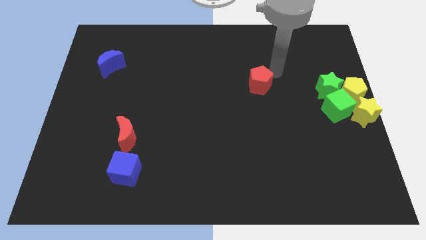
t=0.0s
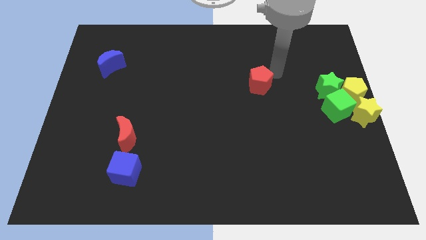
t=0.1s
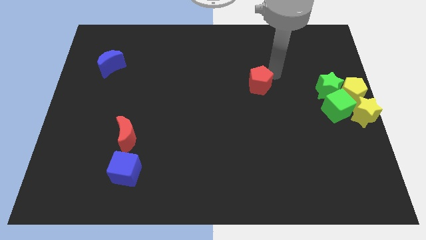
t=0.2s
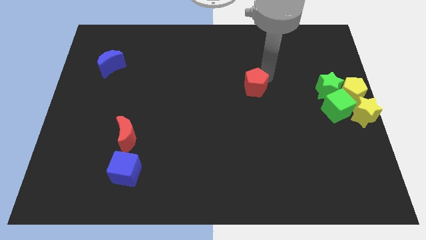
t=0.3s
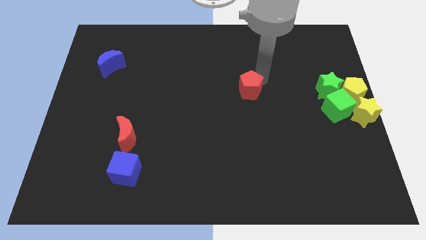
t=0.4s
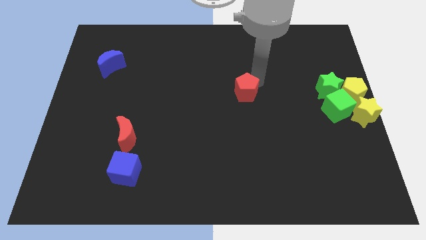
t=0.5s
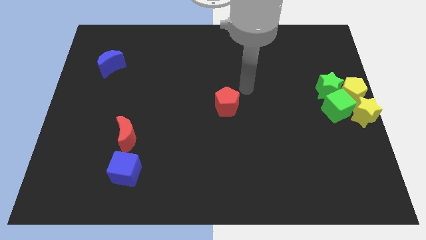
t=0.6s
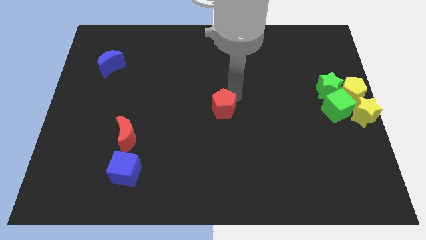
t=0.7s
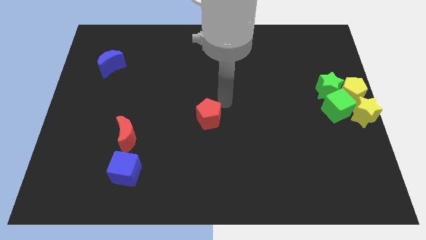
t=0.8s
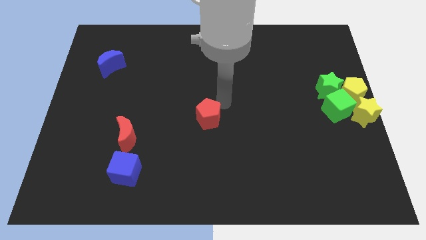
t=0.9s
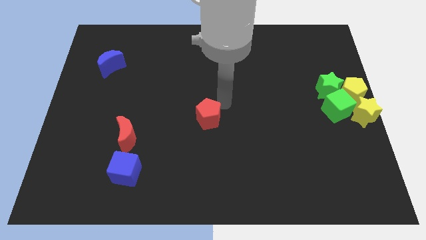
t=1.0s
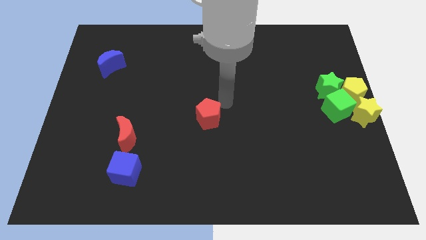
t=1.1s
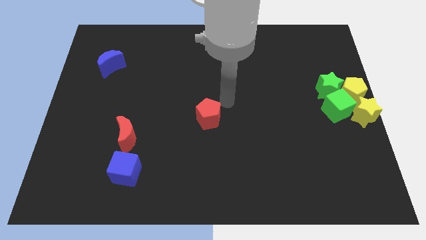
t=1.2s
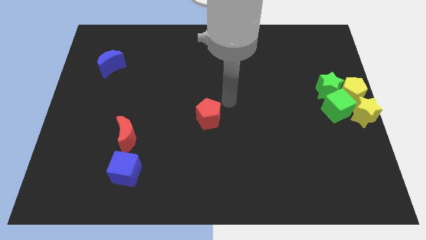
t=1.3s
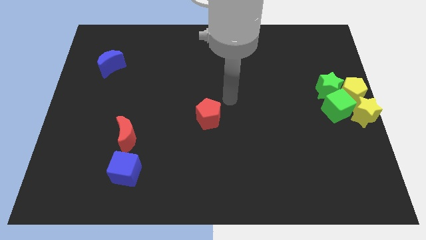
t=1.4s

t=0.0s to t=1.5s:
place the red pentagon towards the center of the board

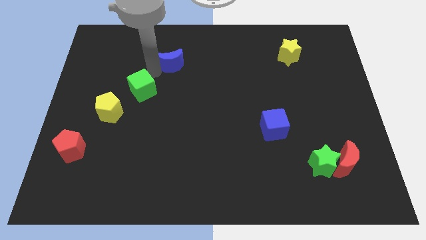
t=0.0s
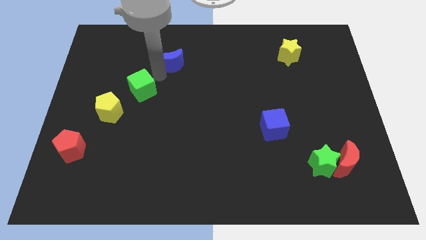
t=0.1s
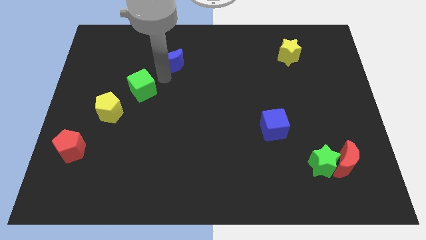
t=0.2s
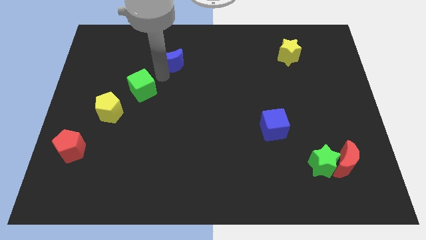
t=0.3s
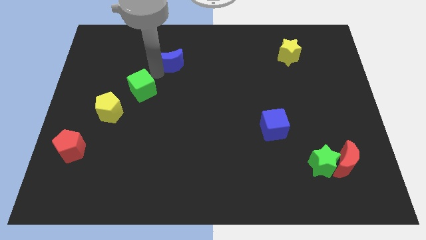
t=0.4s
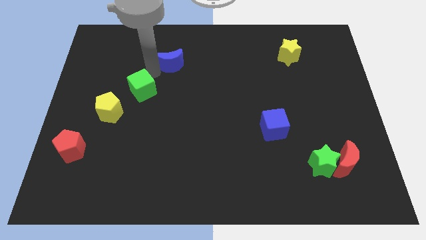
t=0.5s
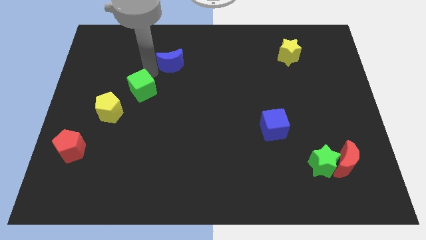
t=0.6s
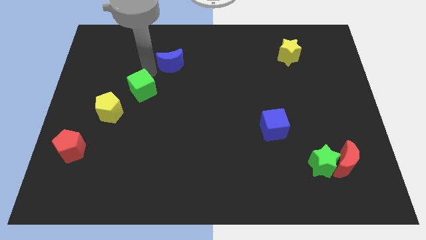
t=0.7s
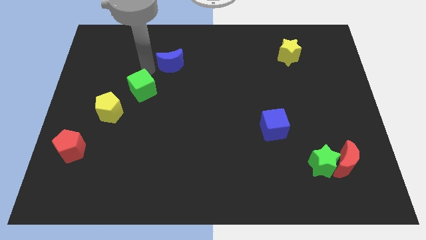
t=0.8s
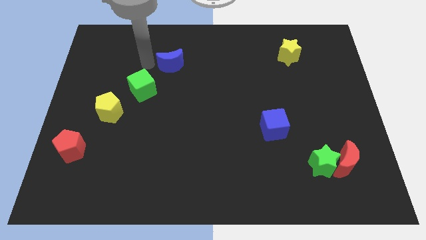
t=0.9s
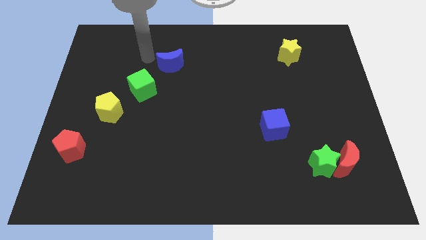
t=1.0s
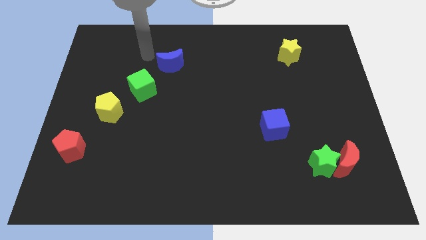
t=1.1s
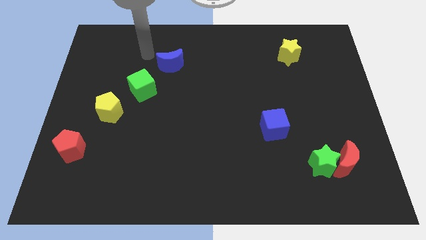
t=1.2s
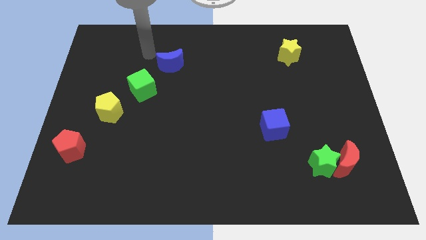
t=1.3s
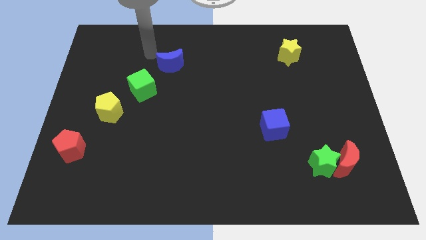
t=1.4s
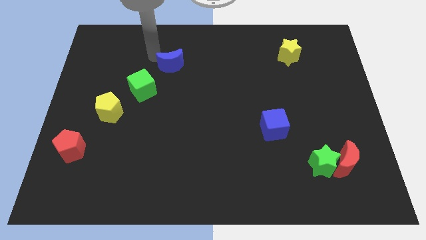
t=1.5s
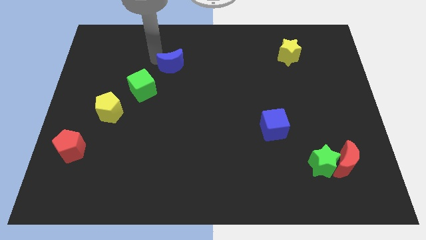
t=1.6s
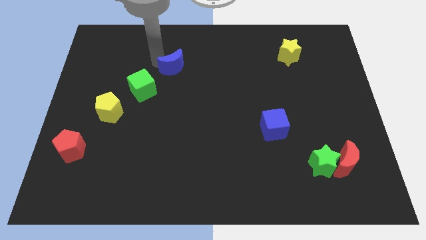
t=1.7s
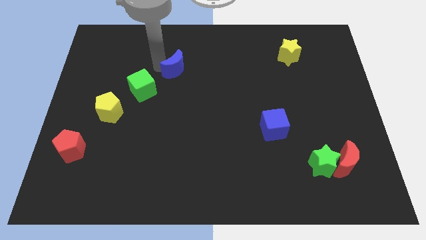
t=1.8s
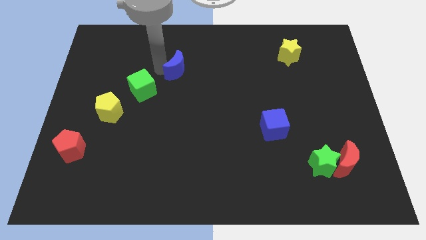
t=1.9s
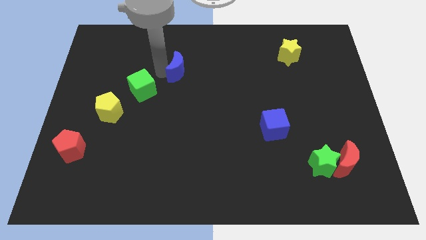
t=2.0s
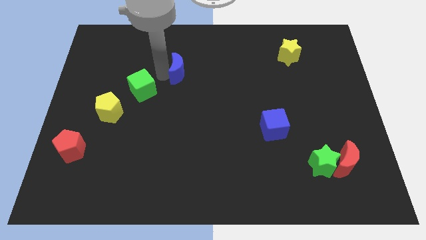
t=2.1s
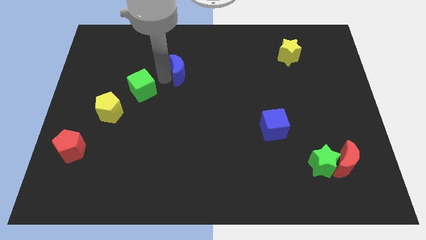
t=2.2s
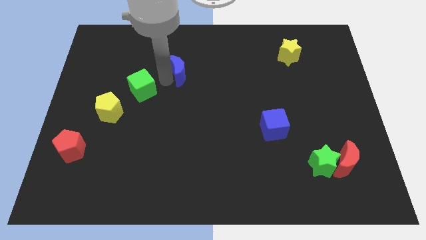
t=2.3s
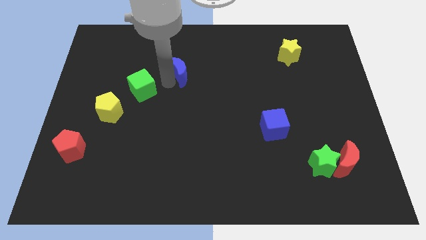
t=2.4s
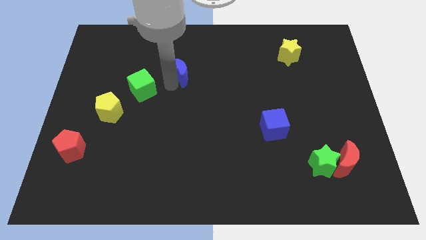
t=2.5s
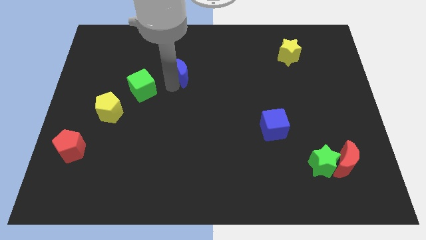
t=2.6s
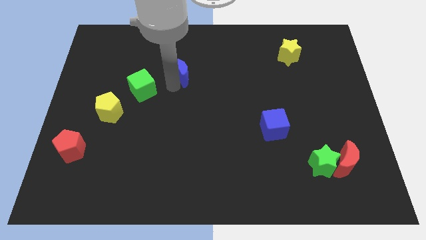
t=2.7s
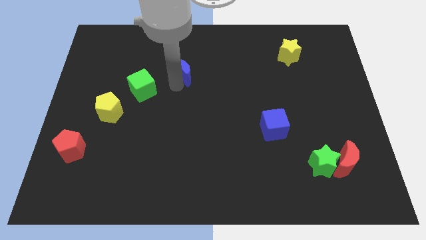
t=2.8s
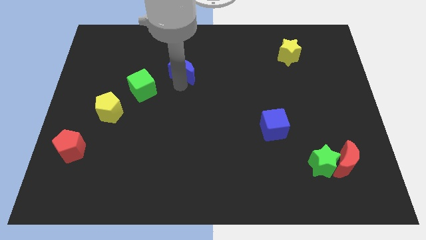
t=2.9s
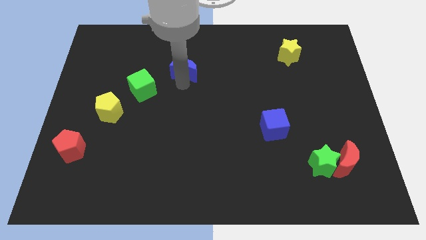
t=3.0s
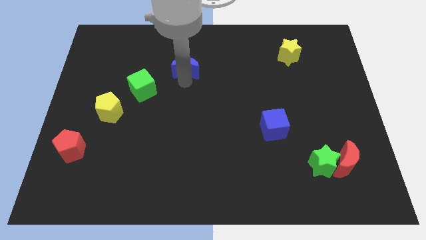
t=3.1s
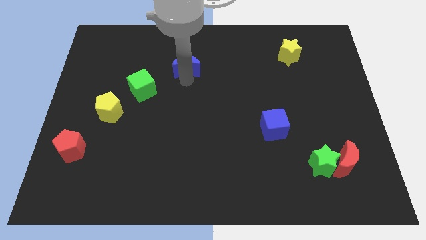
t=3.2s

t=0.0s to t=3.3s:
rotate the blue moon

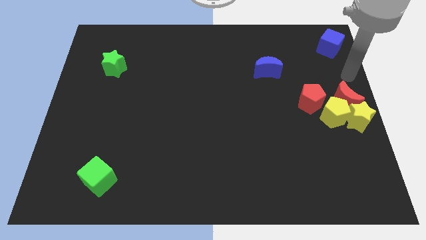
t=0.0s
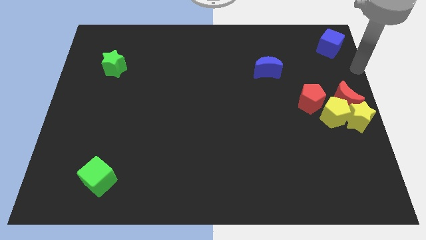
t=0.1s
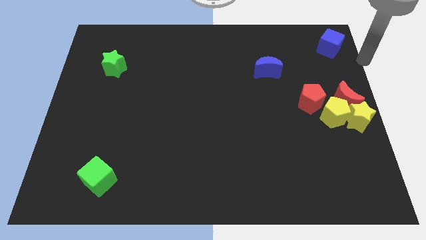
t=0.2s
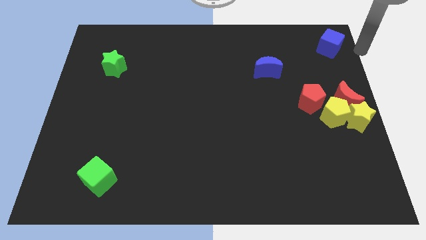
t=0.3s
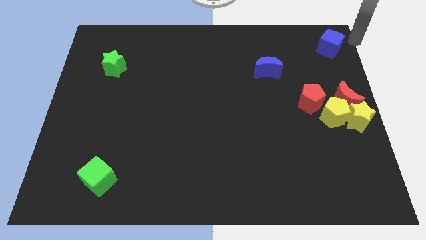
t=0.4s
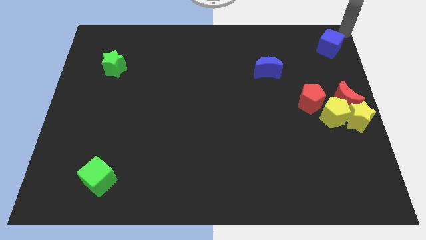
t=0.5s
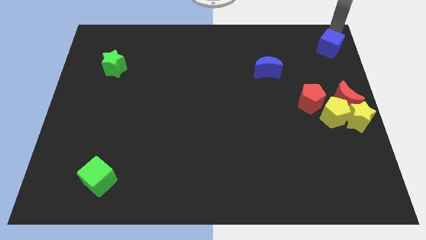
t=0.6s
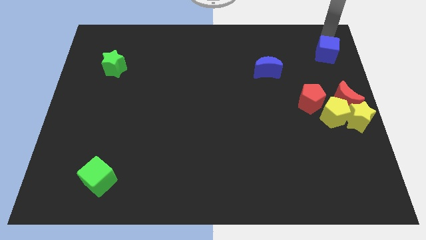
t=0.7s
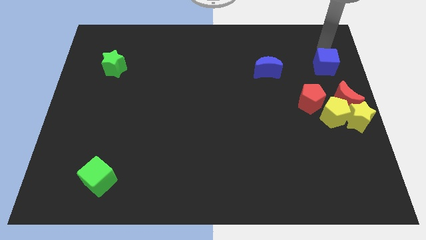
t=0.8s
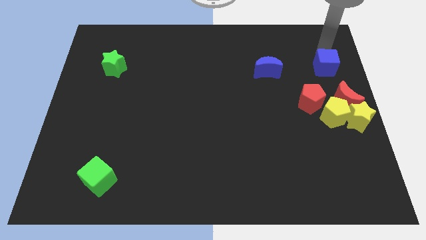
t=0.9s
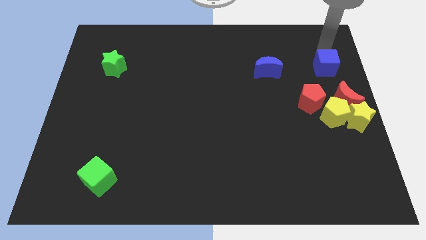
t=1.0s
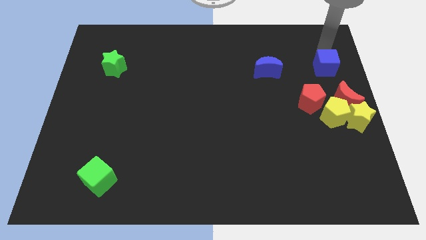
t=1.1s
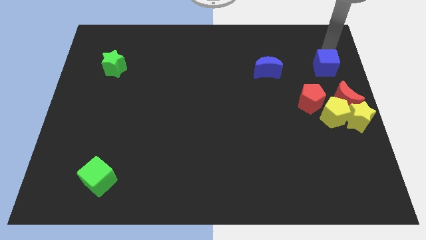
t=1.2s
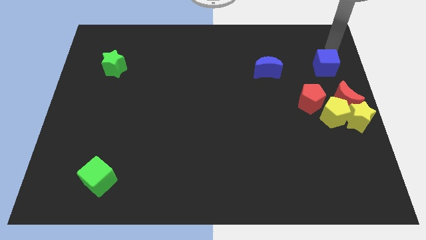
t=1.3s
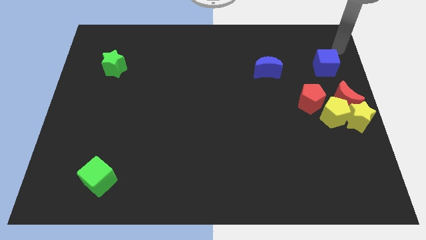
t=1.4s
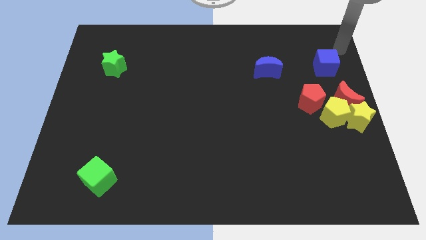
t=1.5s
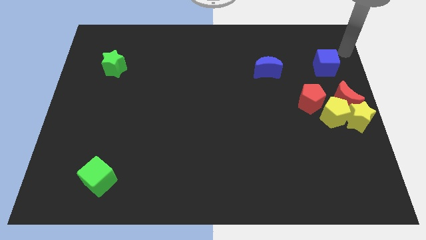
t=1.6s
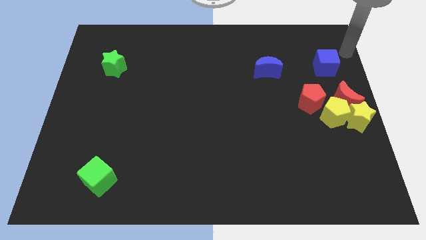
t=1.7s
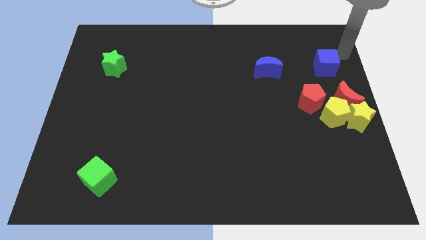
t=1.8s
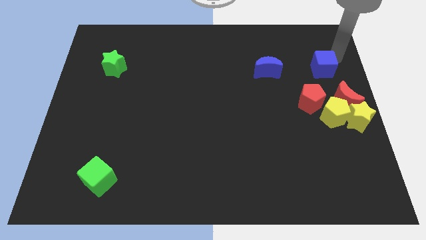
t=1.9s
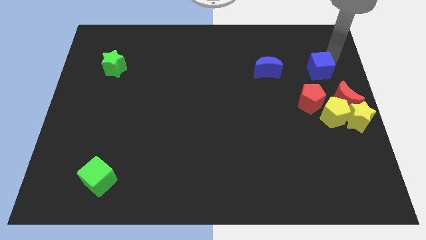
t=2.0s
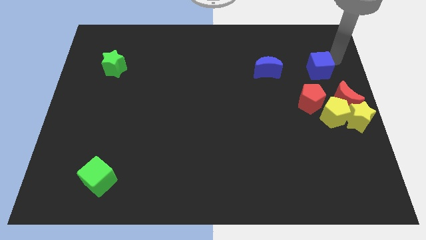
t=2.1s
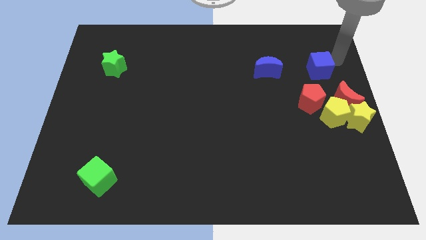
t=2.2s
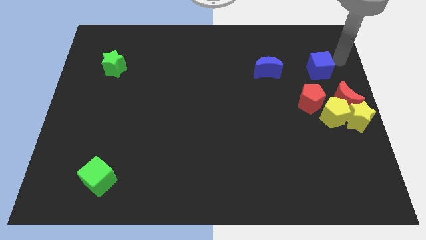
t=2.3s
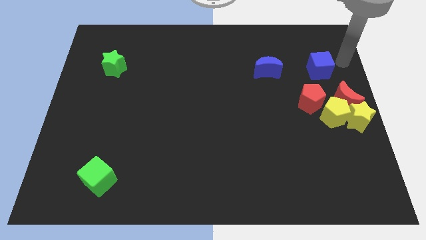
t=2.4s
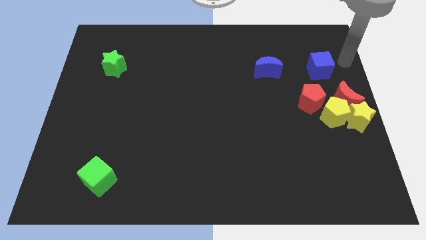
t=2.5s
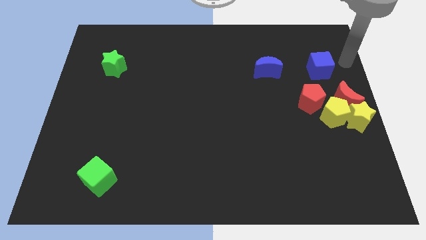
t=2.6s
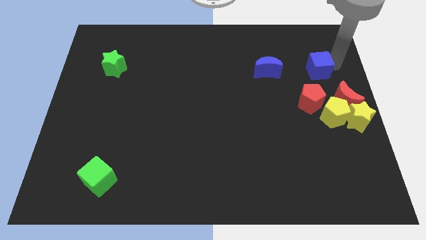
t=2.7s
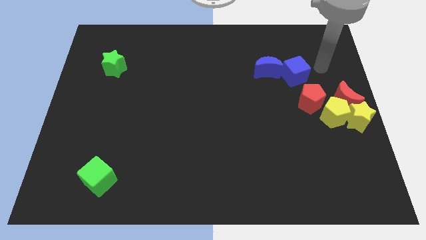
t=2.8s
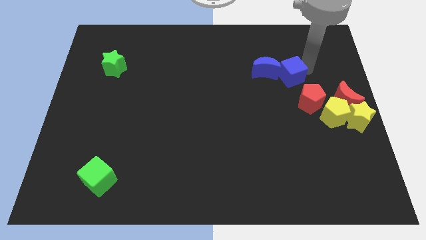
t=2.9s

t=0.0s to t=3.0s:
push the blue cube into the blue moon

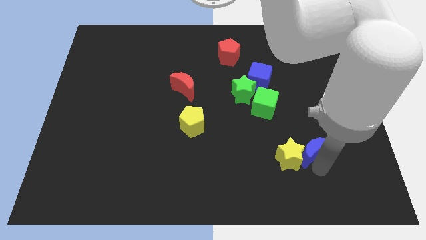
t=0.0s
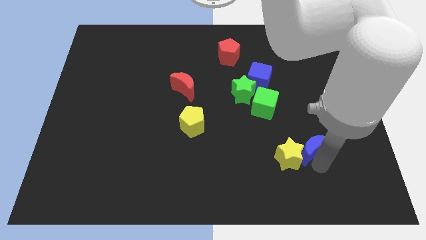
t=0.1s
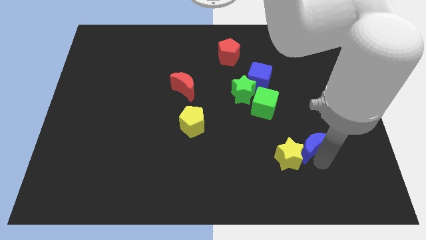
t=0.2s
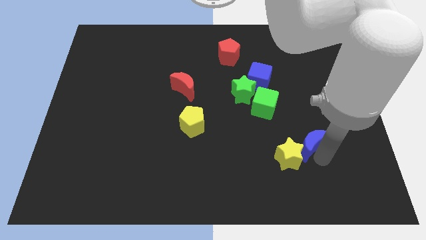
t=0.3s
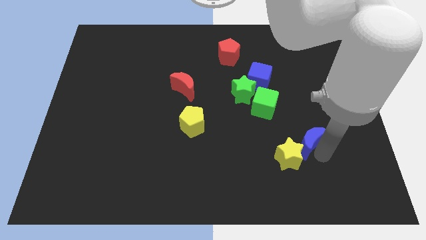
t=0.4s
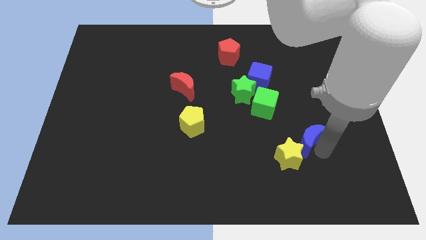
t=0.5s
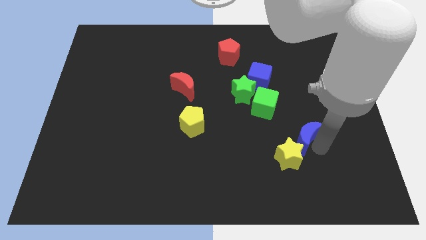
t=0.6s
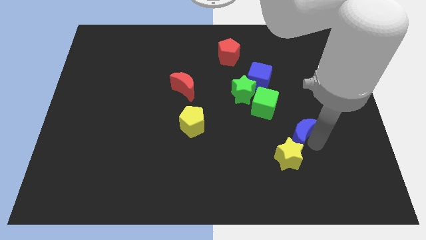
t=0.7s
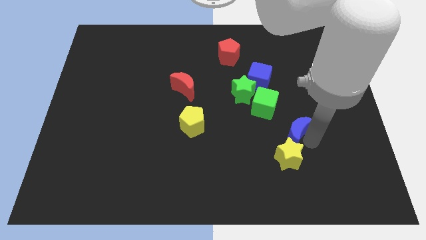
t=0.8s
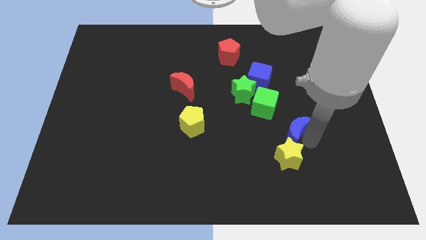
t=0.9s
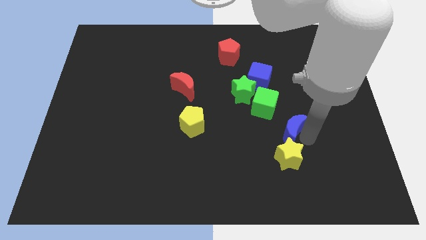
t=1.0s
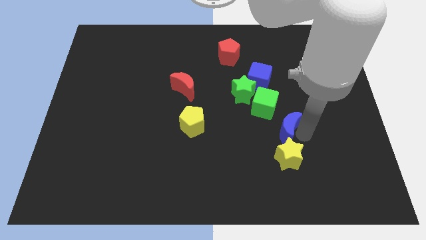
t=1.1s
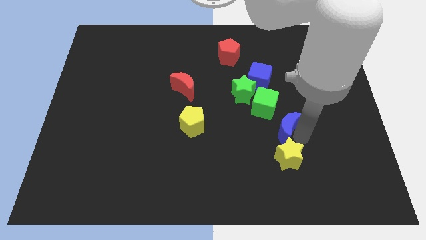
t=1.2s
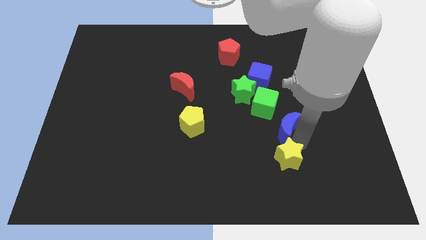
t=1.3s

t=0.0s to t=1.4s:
place the blue moon to the top side of the yellow star
